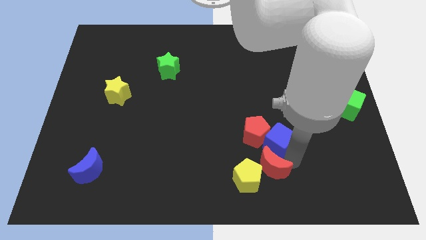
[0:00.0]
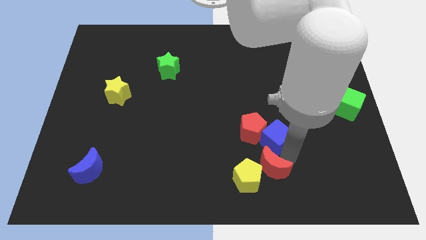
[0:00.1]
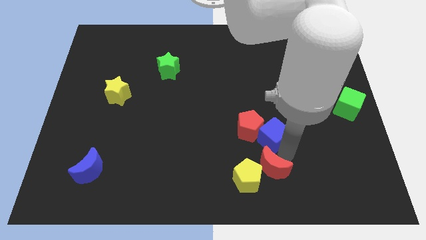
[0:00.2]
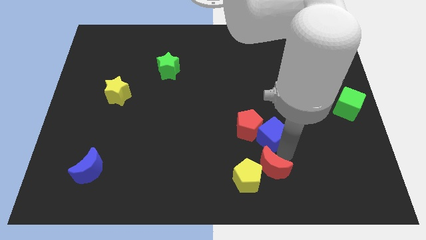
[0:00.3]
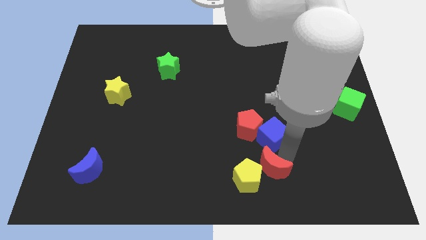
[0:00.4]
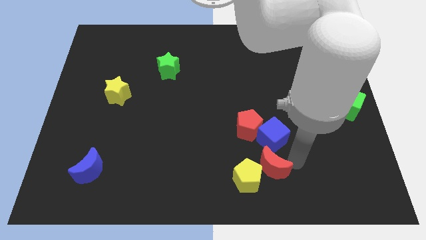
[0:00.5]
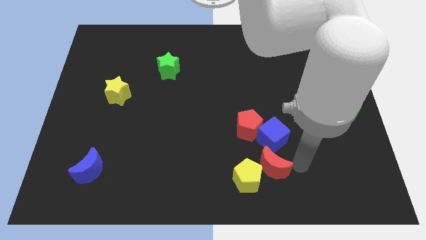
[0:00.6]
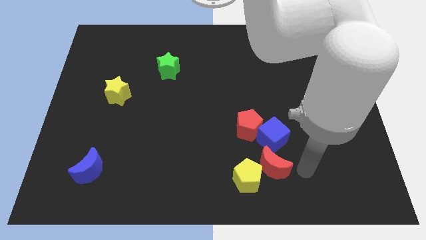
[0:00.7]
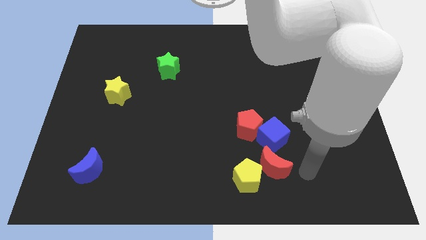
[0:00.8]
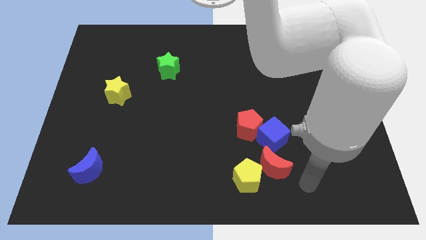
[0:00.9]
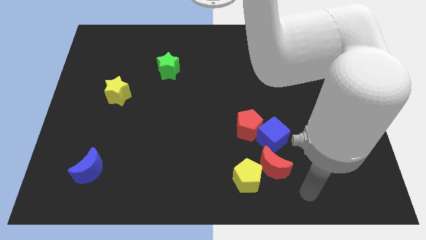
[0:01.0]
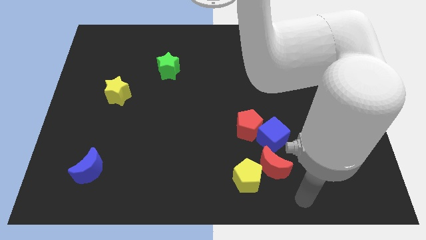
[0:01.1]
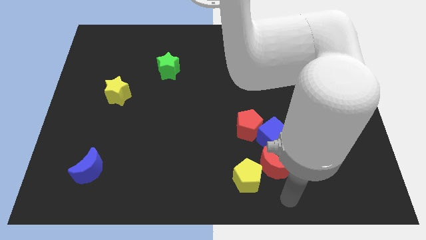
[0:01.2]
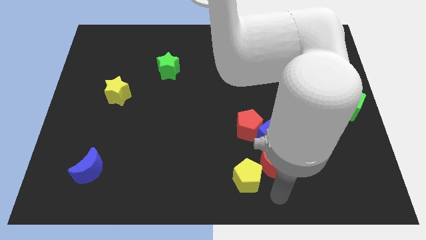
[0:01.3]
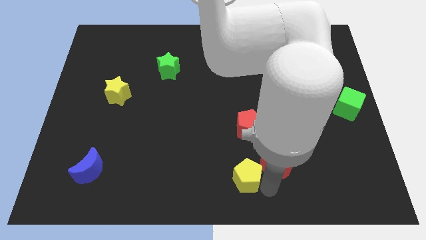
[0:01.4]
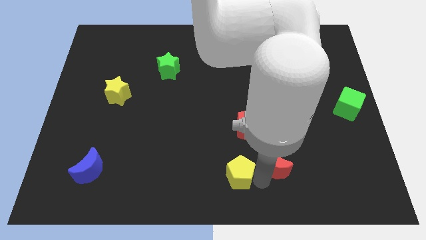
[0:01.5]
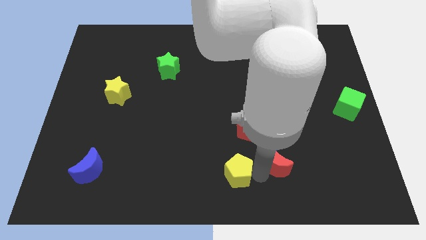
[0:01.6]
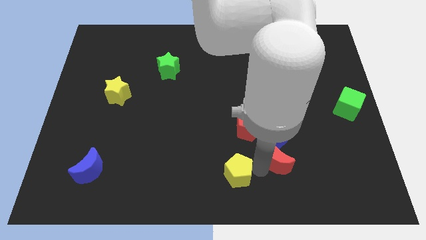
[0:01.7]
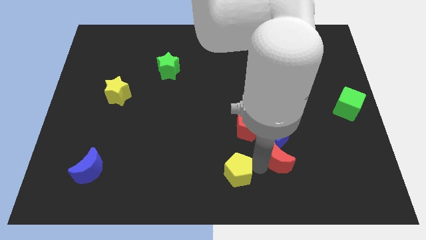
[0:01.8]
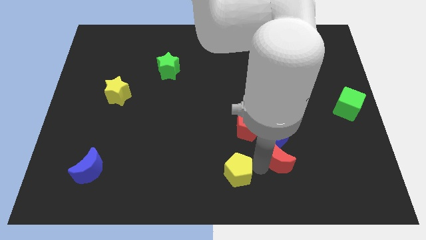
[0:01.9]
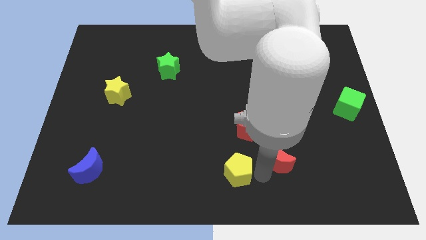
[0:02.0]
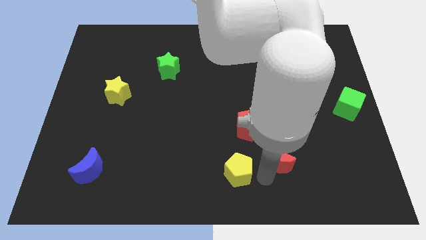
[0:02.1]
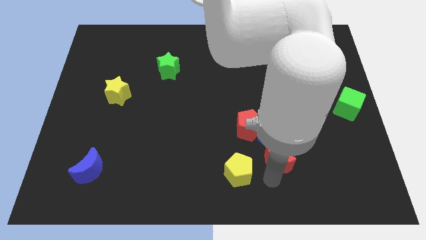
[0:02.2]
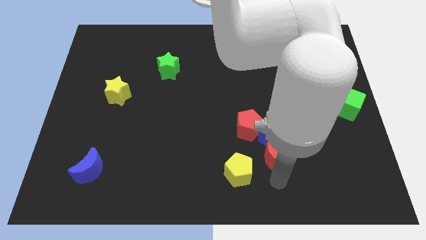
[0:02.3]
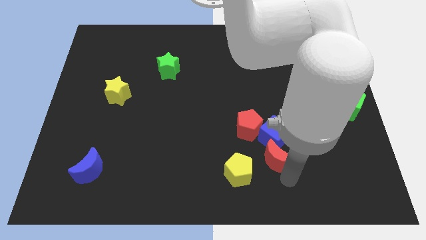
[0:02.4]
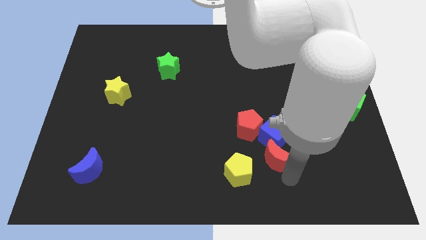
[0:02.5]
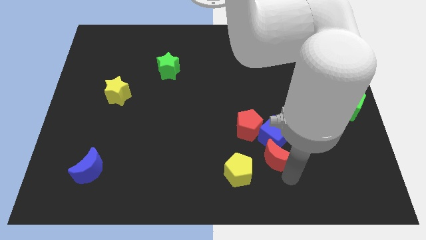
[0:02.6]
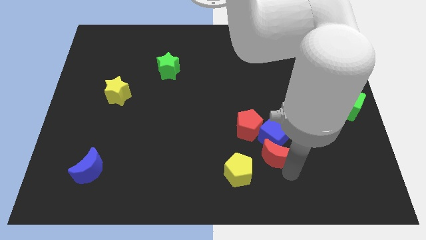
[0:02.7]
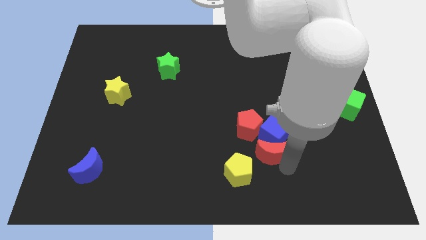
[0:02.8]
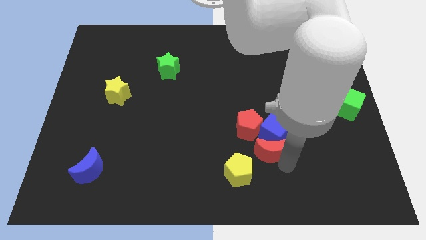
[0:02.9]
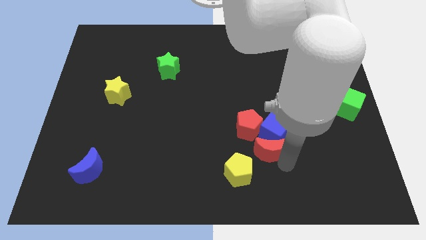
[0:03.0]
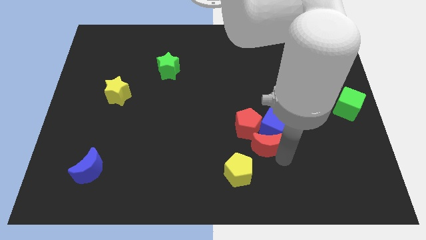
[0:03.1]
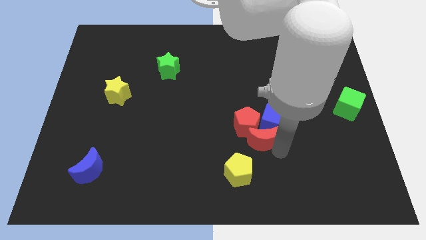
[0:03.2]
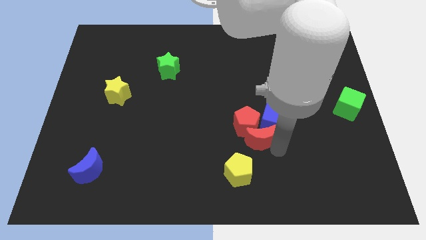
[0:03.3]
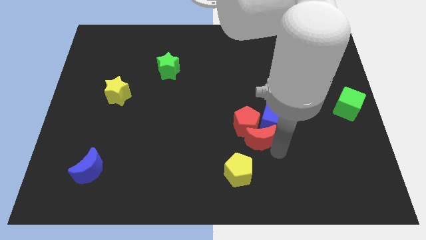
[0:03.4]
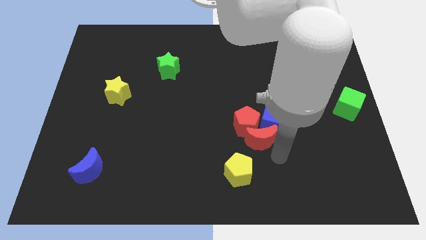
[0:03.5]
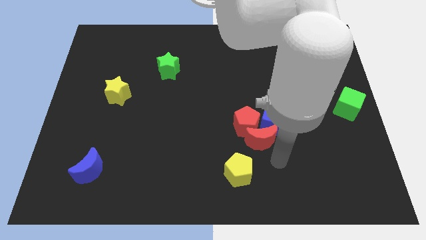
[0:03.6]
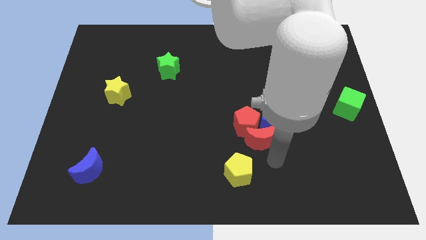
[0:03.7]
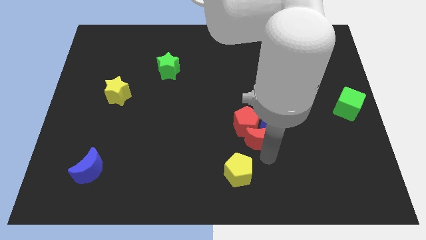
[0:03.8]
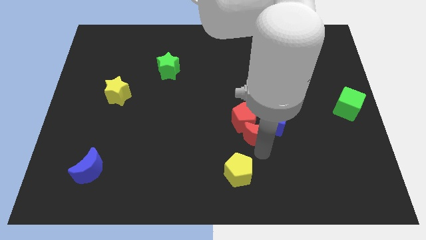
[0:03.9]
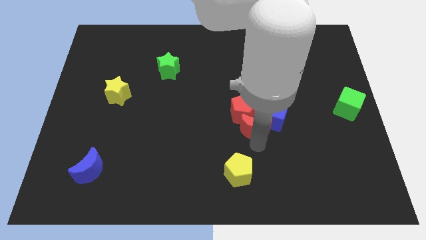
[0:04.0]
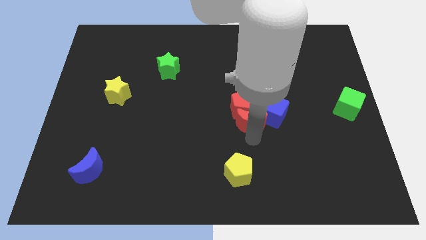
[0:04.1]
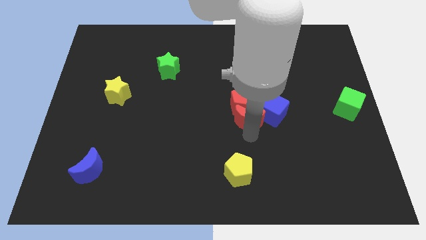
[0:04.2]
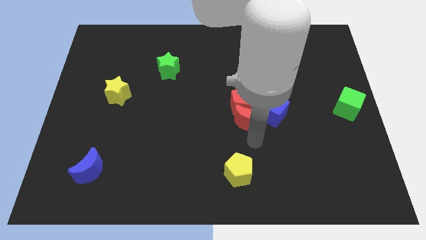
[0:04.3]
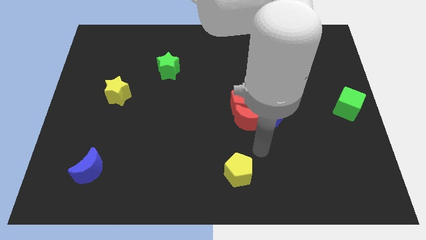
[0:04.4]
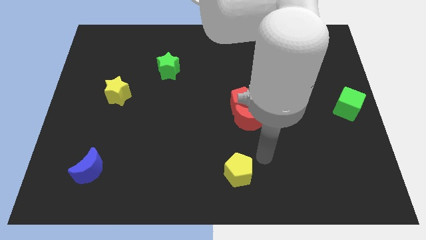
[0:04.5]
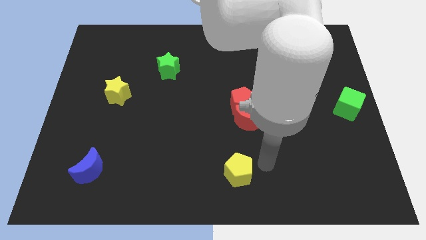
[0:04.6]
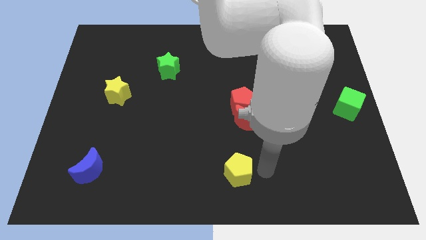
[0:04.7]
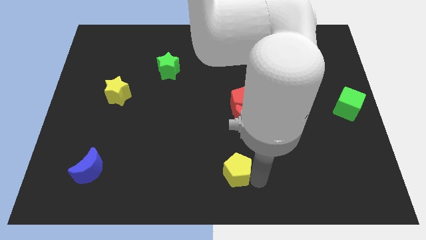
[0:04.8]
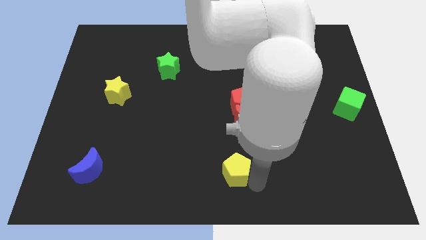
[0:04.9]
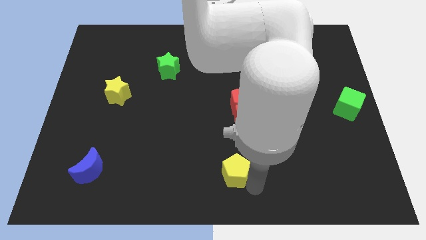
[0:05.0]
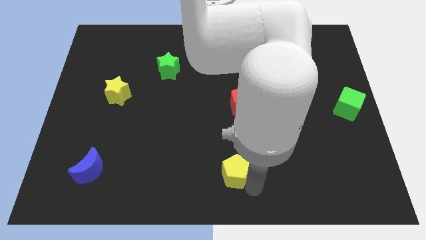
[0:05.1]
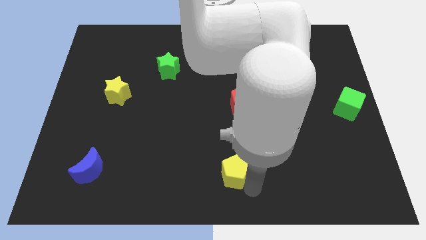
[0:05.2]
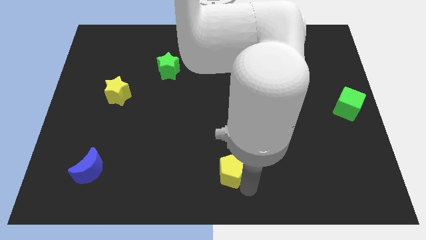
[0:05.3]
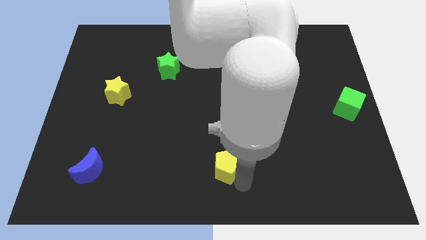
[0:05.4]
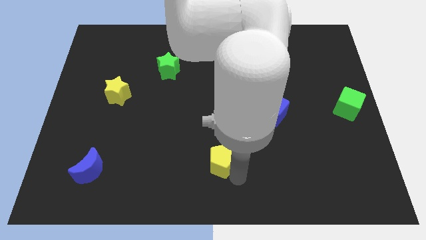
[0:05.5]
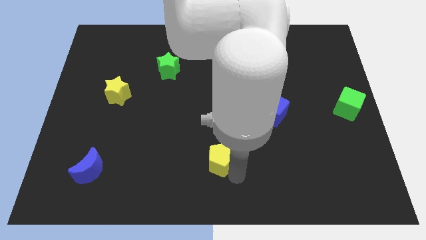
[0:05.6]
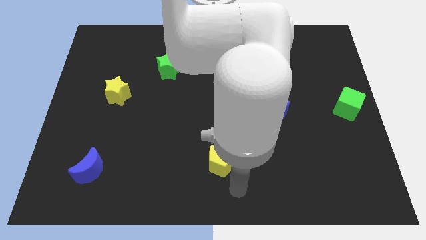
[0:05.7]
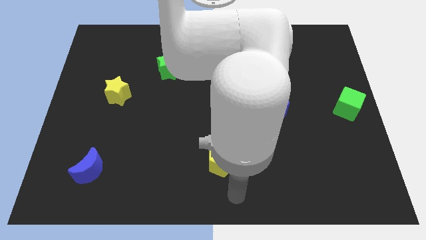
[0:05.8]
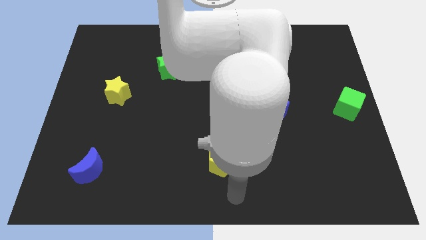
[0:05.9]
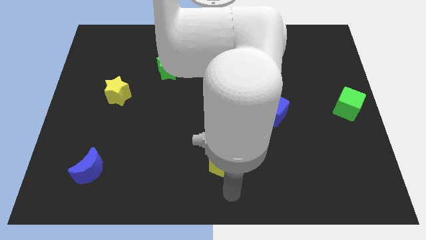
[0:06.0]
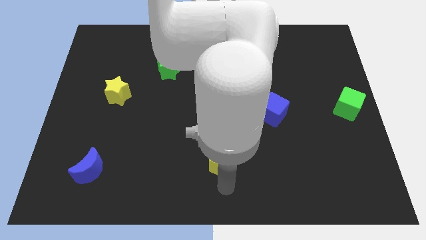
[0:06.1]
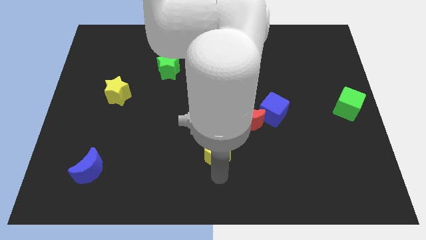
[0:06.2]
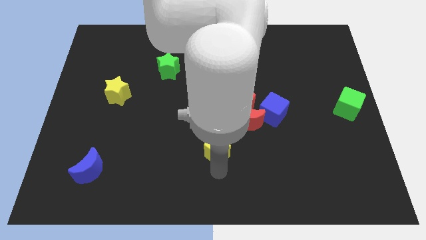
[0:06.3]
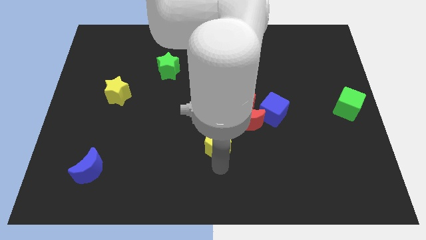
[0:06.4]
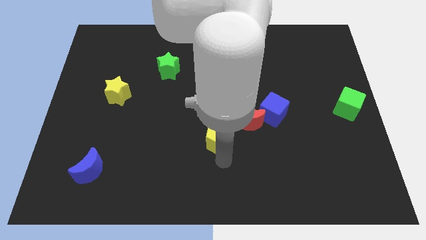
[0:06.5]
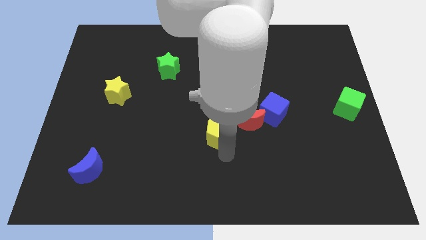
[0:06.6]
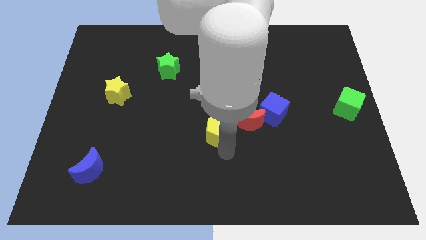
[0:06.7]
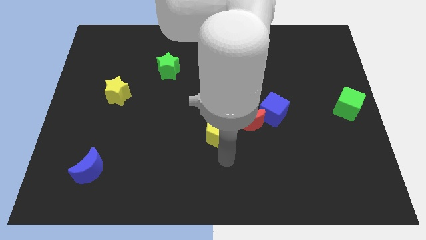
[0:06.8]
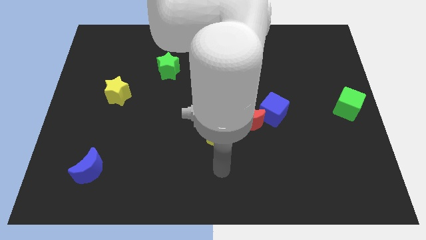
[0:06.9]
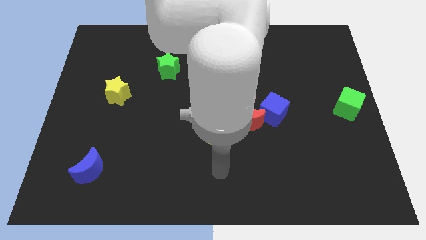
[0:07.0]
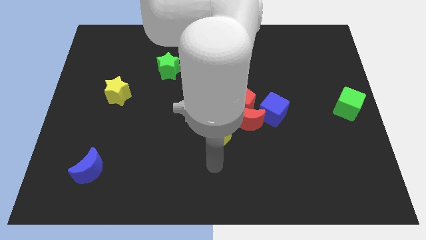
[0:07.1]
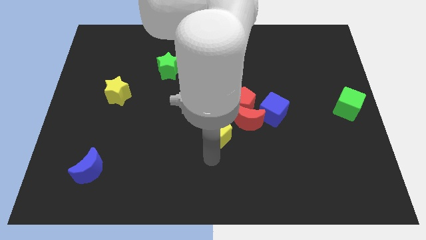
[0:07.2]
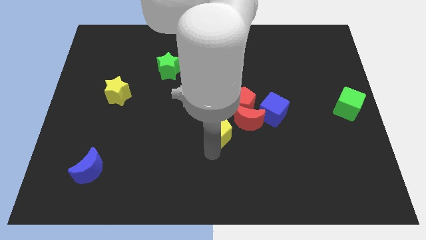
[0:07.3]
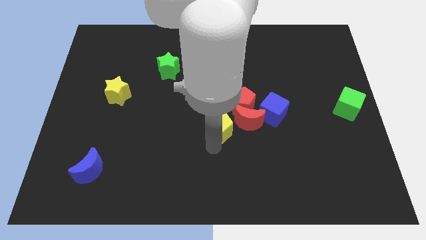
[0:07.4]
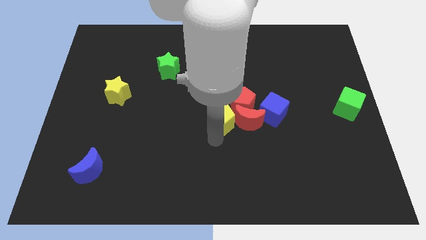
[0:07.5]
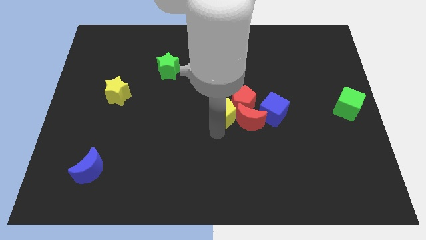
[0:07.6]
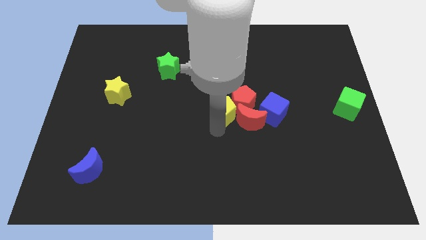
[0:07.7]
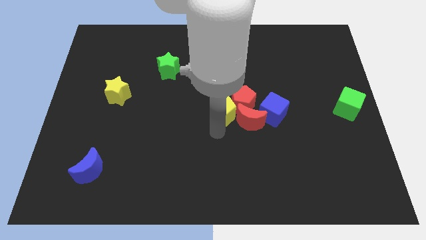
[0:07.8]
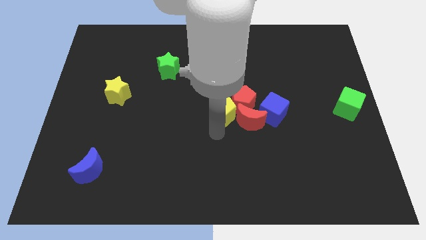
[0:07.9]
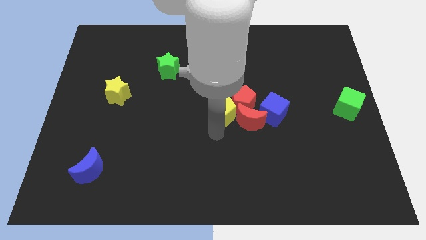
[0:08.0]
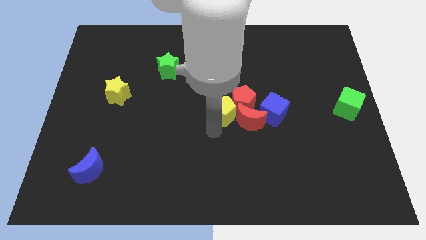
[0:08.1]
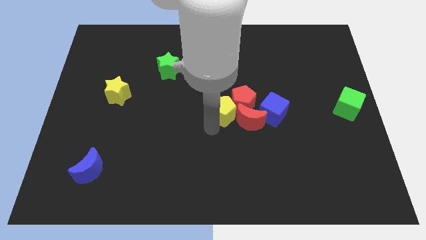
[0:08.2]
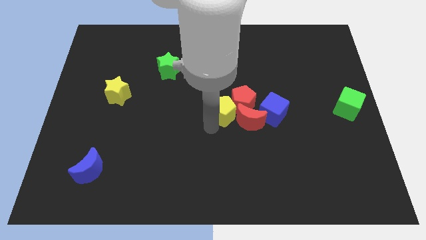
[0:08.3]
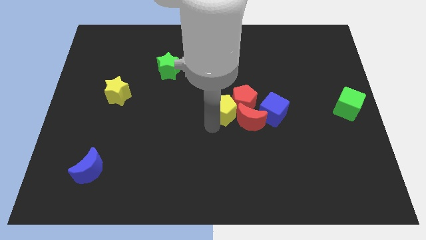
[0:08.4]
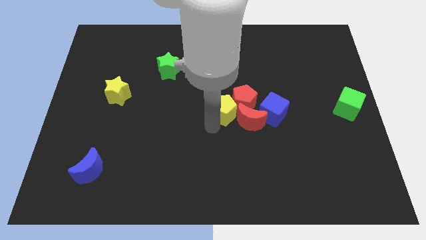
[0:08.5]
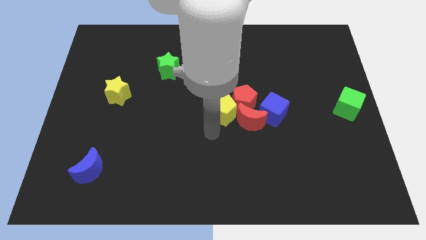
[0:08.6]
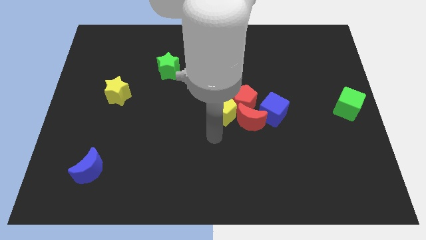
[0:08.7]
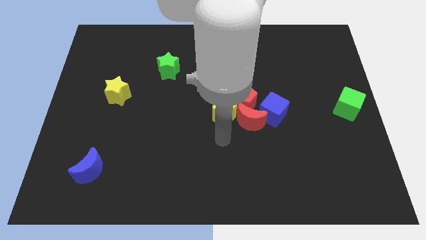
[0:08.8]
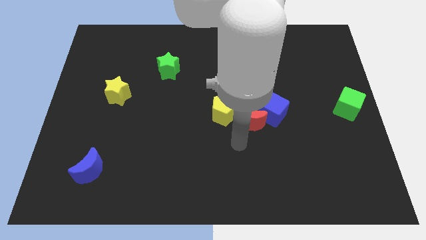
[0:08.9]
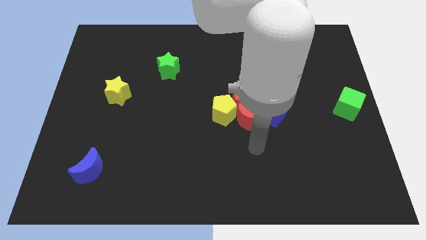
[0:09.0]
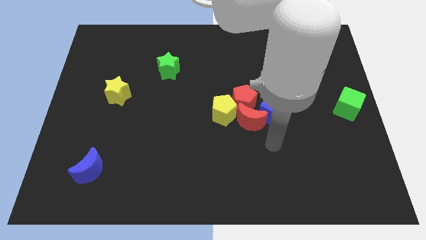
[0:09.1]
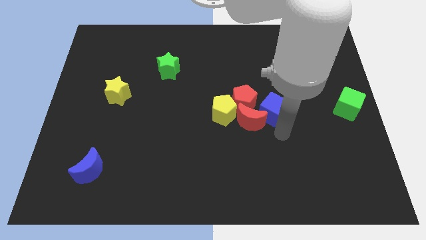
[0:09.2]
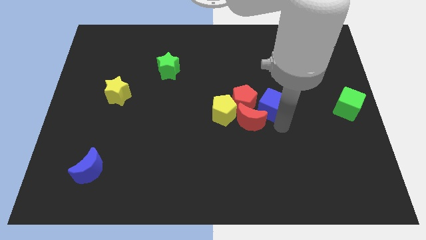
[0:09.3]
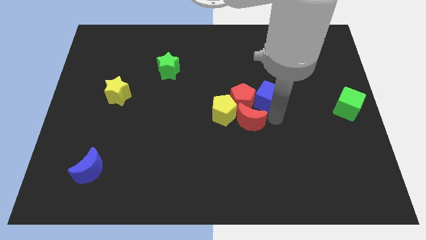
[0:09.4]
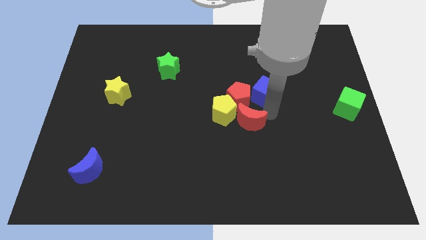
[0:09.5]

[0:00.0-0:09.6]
push a group of blocks upward
